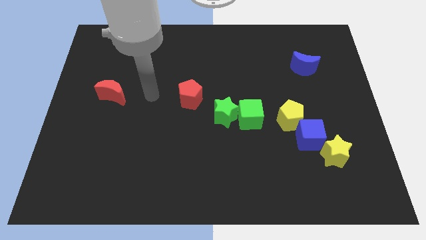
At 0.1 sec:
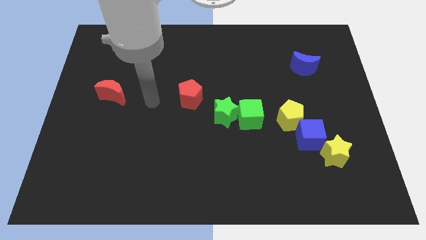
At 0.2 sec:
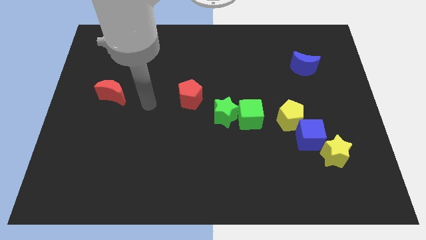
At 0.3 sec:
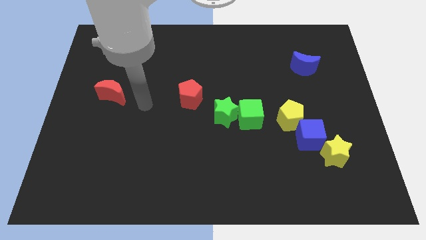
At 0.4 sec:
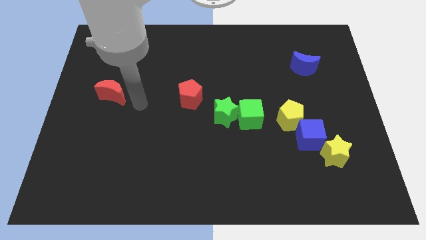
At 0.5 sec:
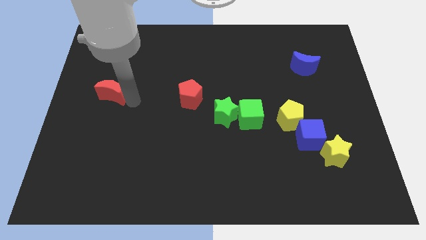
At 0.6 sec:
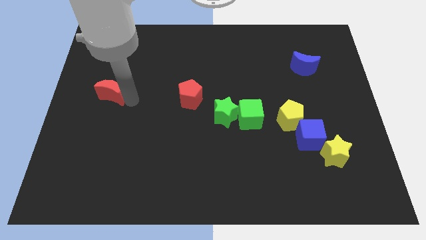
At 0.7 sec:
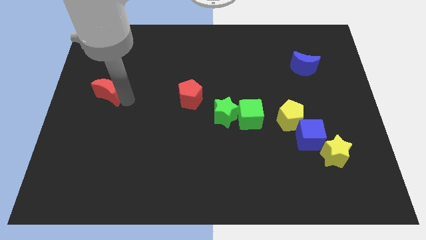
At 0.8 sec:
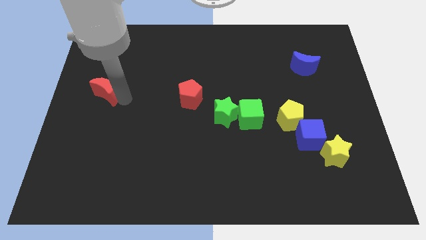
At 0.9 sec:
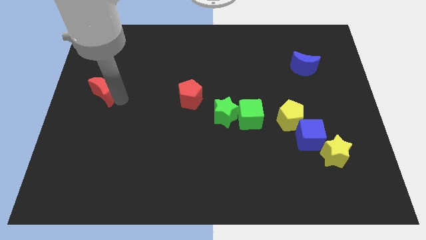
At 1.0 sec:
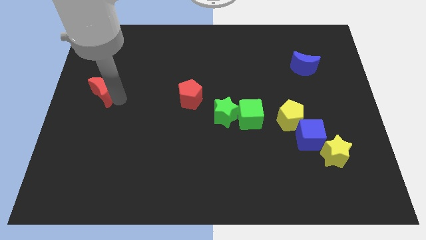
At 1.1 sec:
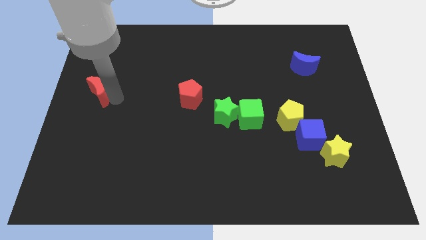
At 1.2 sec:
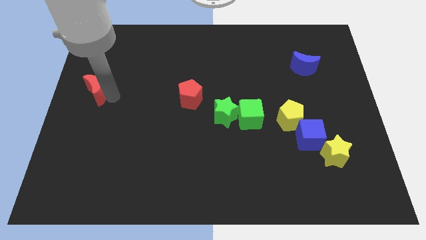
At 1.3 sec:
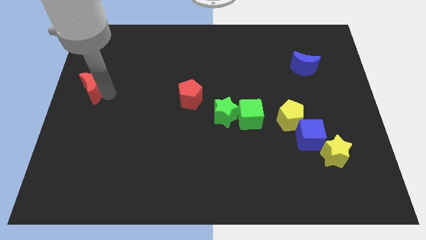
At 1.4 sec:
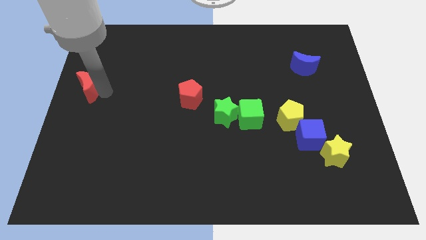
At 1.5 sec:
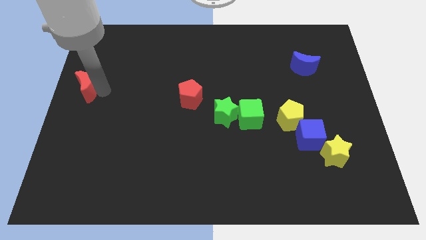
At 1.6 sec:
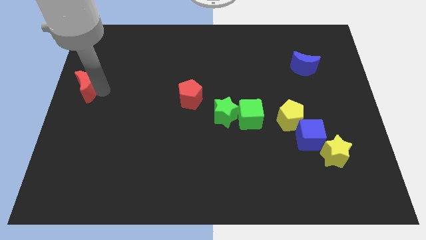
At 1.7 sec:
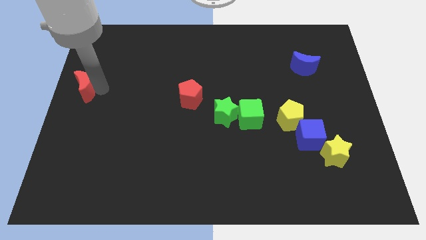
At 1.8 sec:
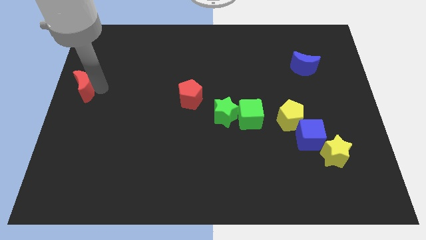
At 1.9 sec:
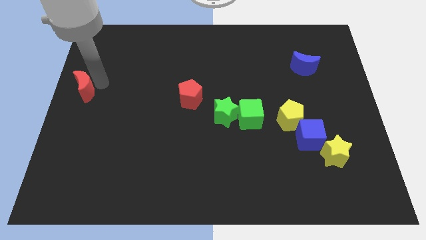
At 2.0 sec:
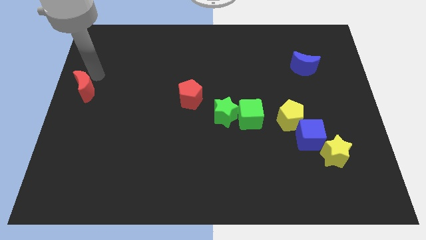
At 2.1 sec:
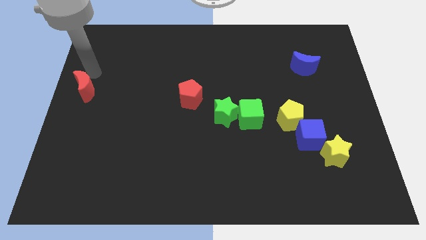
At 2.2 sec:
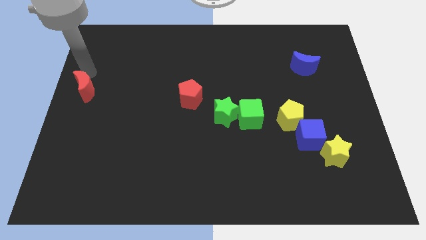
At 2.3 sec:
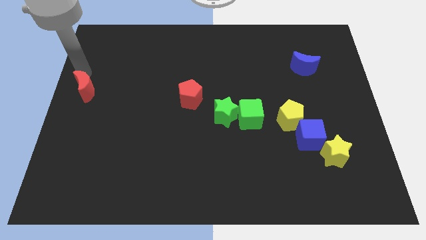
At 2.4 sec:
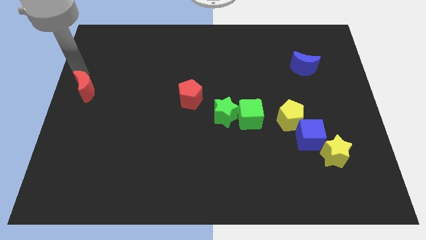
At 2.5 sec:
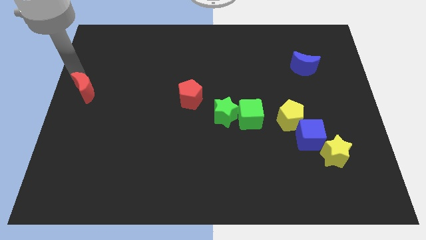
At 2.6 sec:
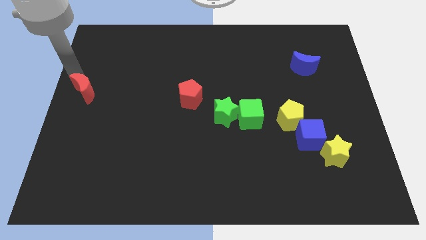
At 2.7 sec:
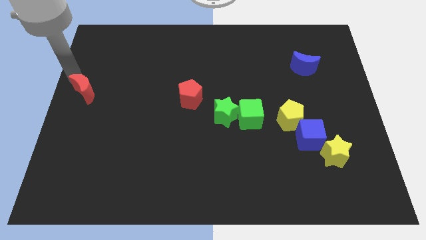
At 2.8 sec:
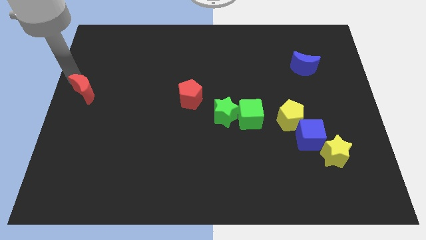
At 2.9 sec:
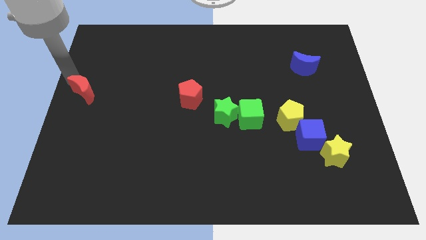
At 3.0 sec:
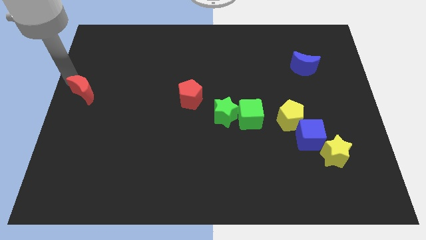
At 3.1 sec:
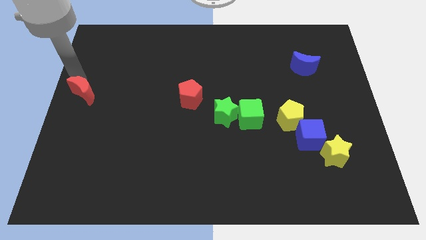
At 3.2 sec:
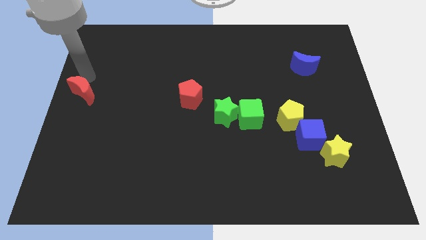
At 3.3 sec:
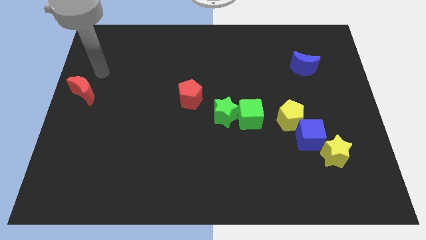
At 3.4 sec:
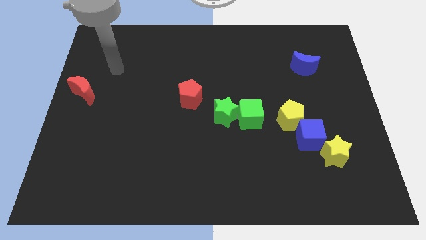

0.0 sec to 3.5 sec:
push the red crescent parallel to the red pentagon

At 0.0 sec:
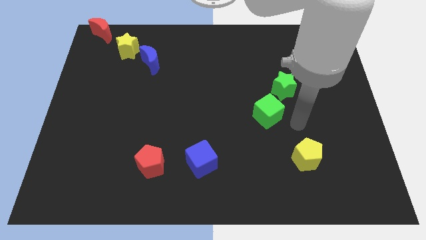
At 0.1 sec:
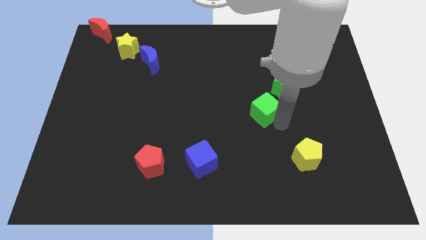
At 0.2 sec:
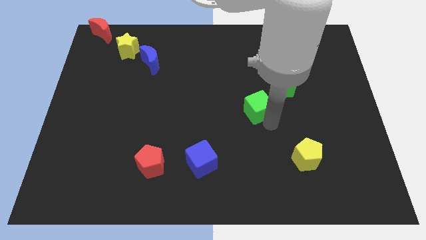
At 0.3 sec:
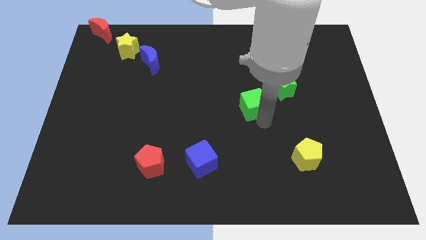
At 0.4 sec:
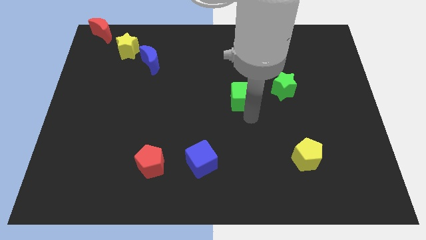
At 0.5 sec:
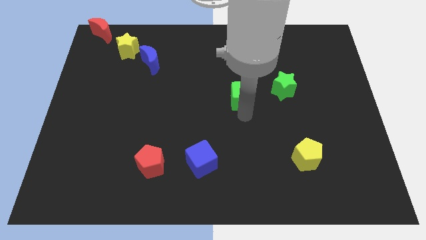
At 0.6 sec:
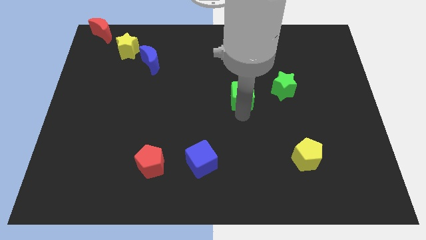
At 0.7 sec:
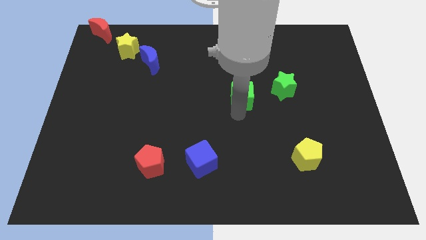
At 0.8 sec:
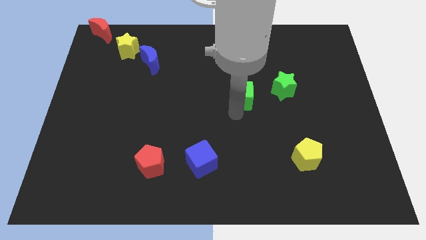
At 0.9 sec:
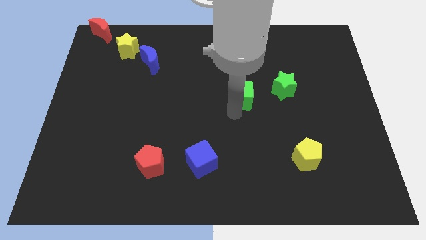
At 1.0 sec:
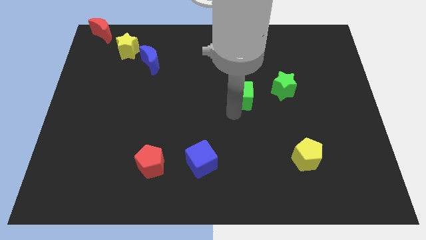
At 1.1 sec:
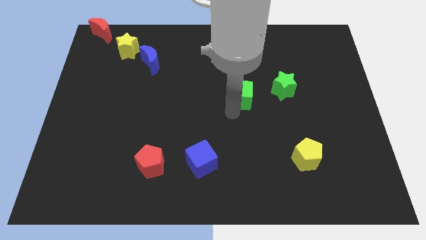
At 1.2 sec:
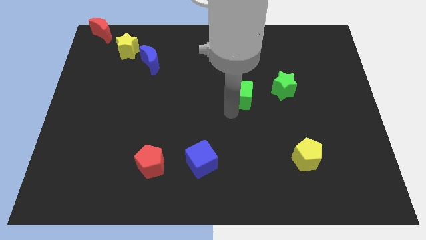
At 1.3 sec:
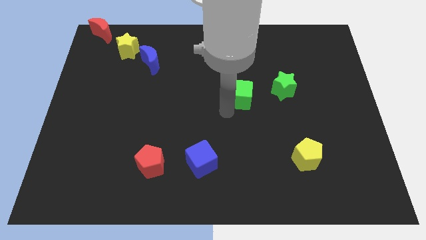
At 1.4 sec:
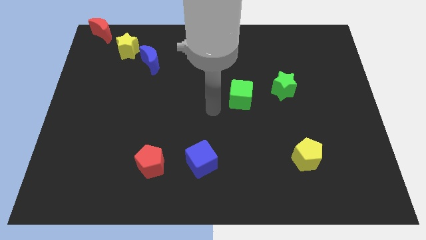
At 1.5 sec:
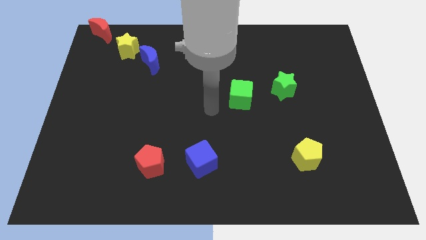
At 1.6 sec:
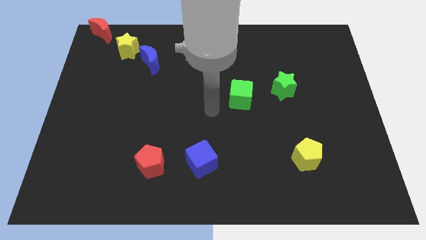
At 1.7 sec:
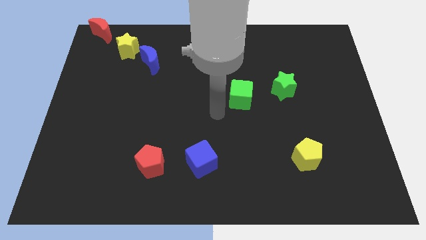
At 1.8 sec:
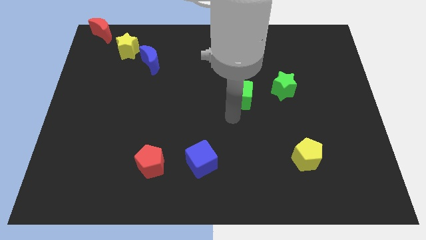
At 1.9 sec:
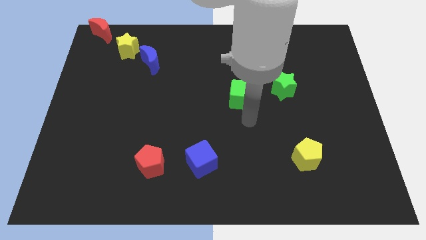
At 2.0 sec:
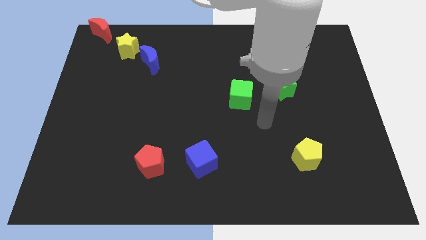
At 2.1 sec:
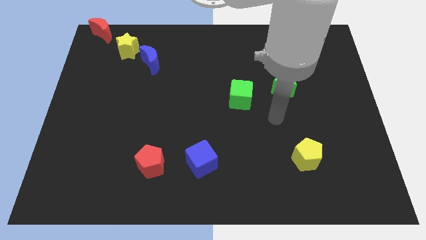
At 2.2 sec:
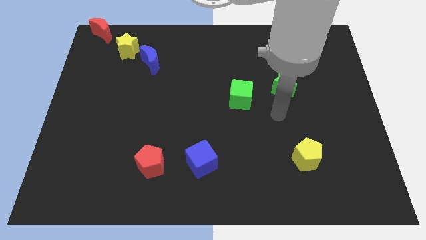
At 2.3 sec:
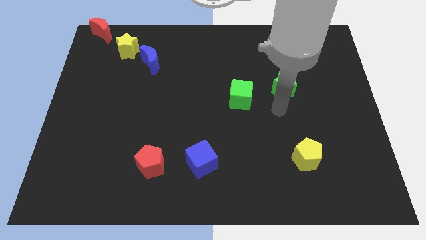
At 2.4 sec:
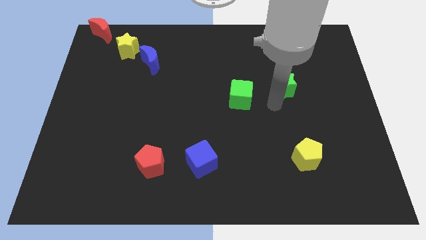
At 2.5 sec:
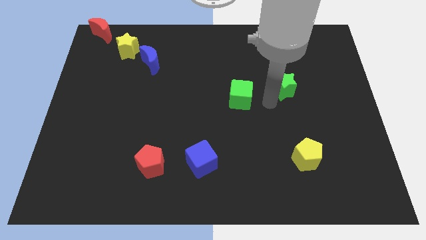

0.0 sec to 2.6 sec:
place green cube beside green star

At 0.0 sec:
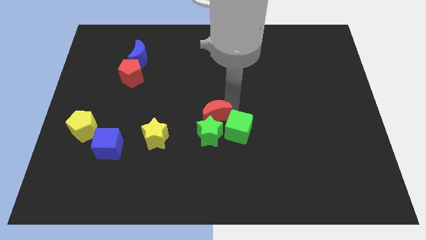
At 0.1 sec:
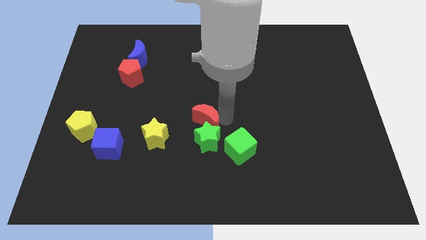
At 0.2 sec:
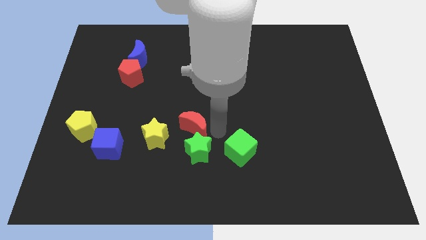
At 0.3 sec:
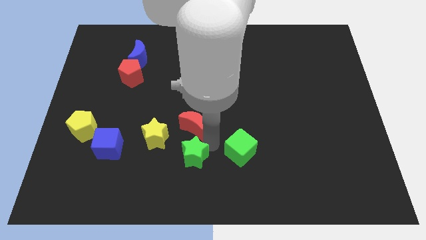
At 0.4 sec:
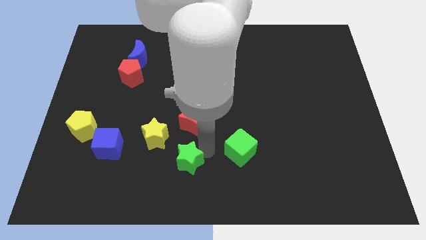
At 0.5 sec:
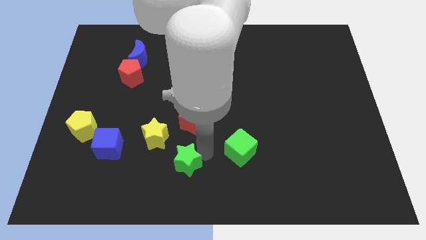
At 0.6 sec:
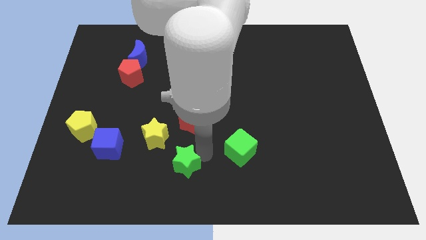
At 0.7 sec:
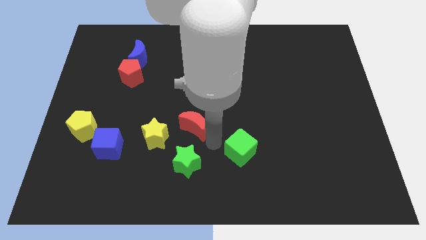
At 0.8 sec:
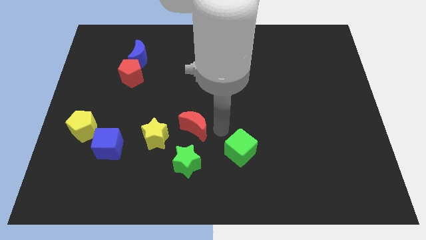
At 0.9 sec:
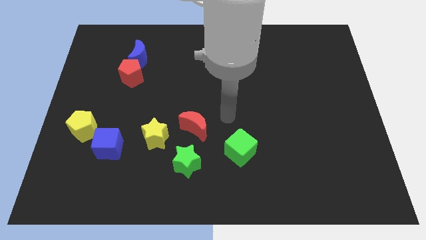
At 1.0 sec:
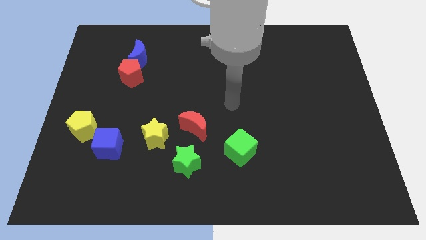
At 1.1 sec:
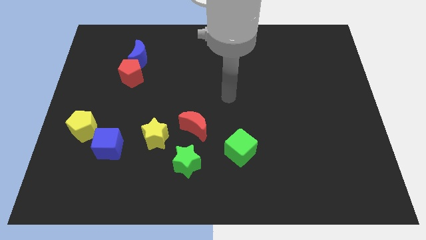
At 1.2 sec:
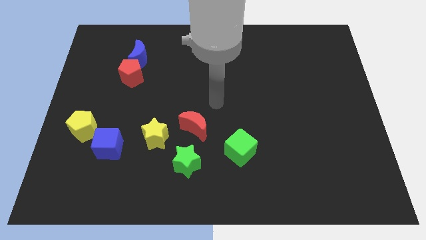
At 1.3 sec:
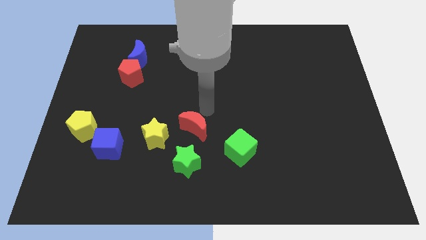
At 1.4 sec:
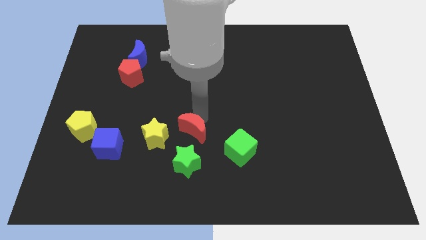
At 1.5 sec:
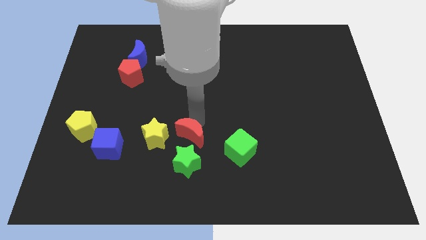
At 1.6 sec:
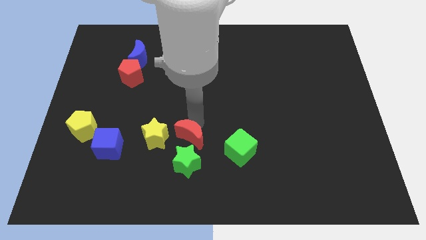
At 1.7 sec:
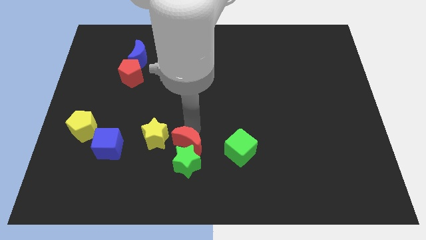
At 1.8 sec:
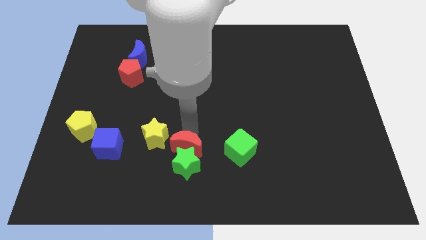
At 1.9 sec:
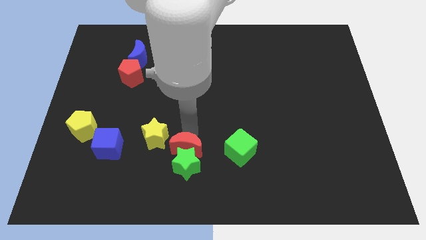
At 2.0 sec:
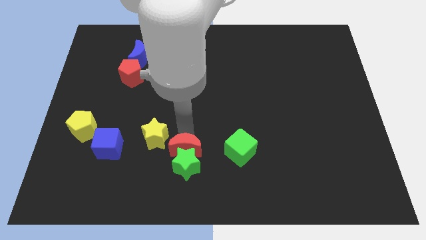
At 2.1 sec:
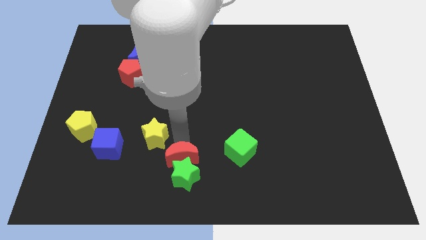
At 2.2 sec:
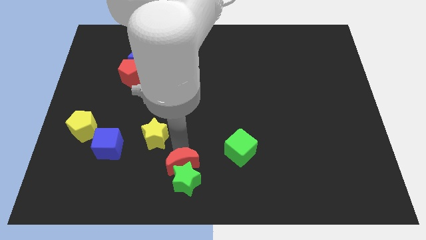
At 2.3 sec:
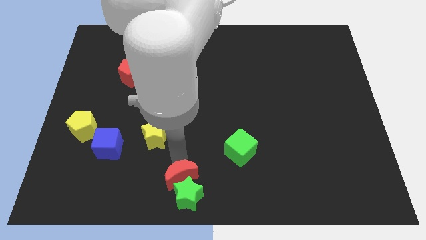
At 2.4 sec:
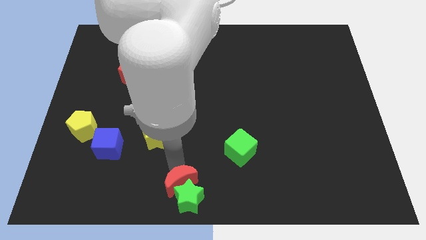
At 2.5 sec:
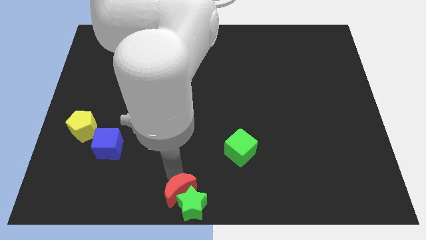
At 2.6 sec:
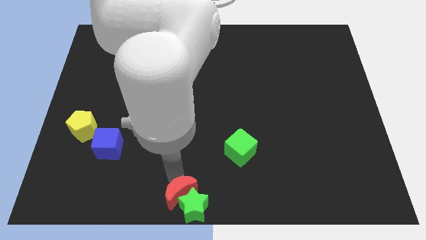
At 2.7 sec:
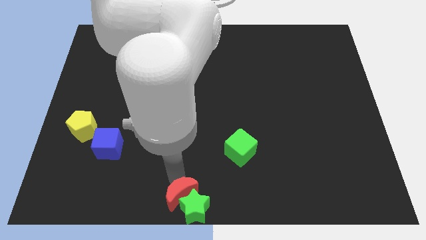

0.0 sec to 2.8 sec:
push the red crescent along with the green star to the bottom center

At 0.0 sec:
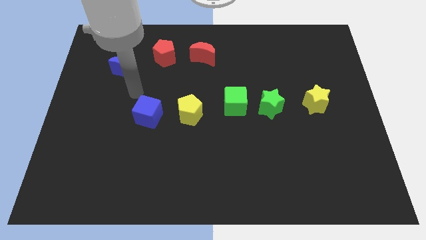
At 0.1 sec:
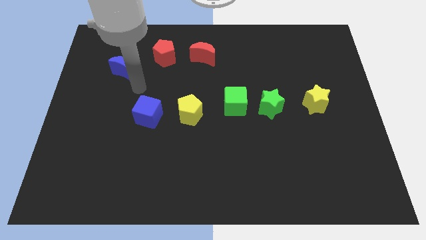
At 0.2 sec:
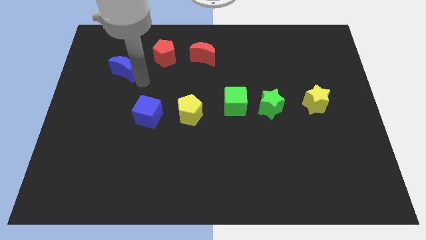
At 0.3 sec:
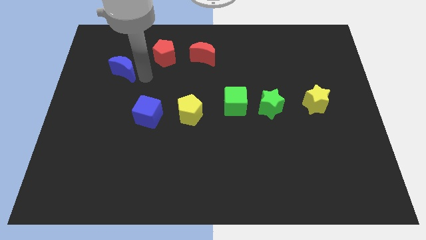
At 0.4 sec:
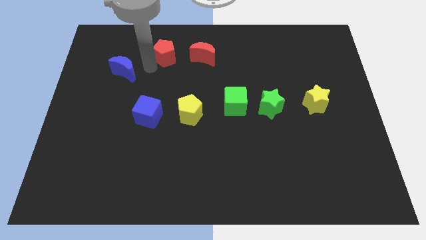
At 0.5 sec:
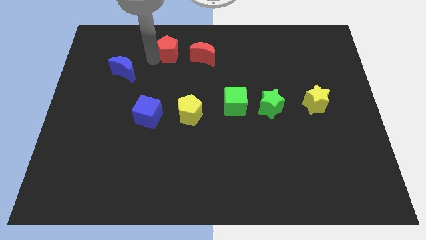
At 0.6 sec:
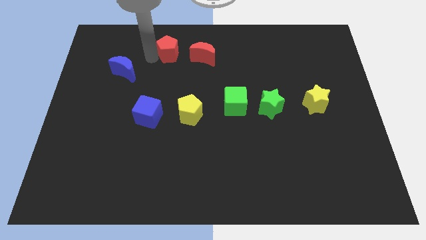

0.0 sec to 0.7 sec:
tap the red pentagon
